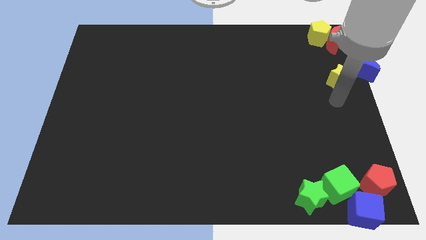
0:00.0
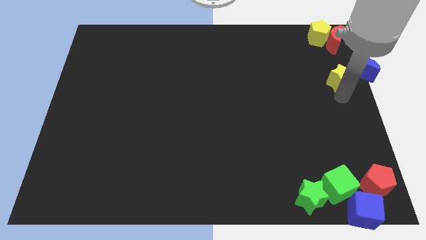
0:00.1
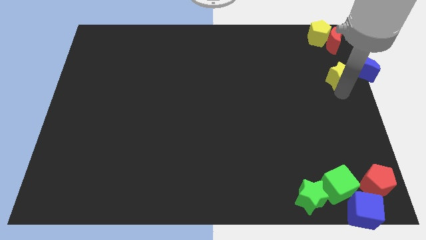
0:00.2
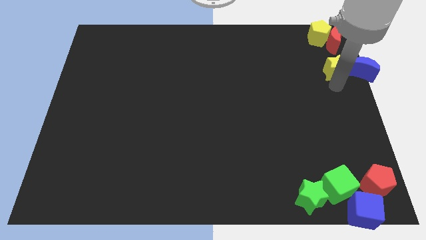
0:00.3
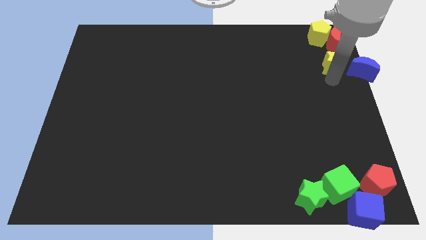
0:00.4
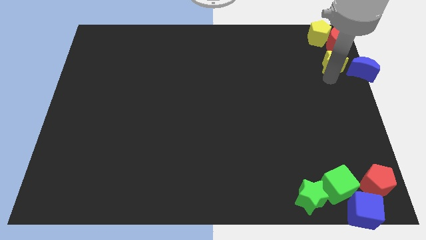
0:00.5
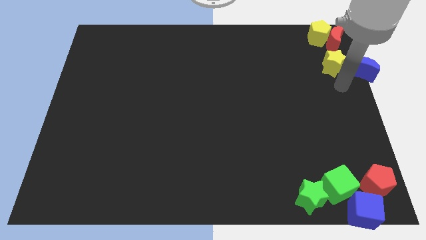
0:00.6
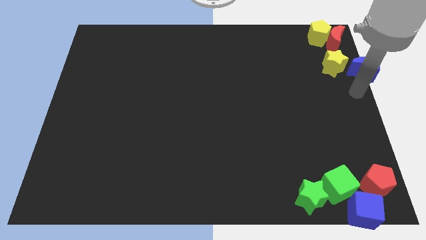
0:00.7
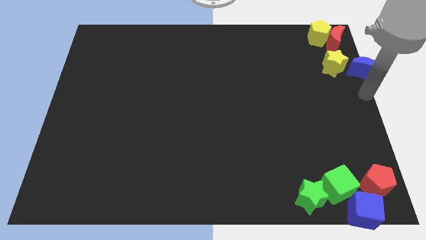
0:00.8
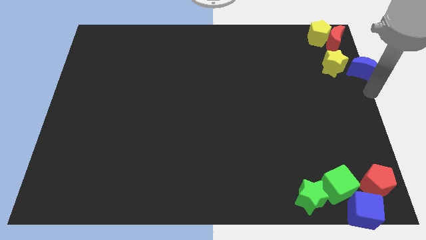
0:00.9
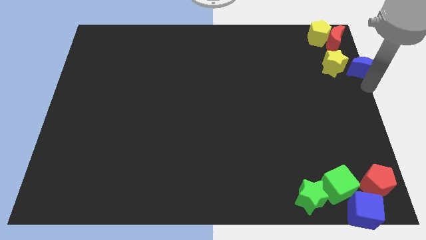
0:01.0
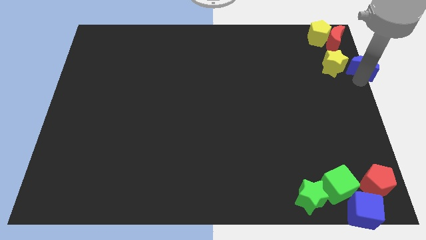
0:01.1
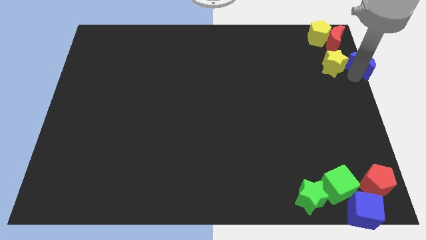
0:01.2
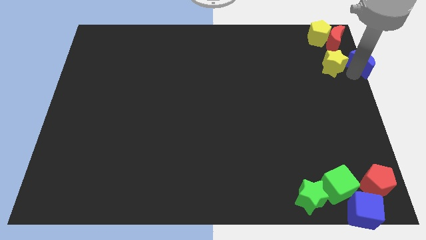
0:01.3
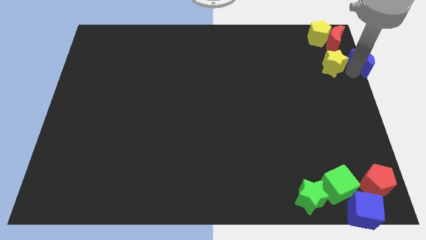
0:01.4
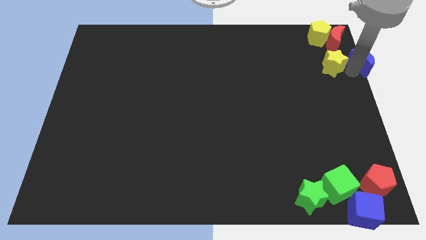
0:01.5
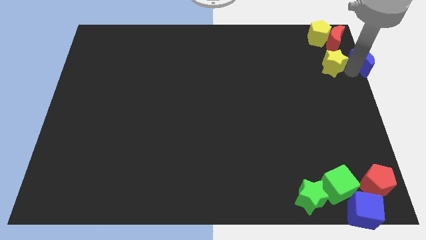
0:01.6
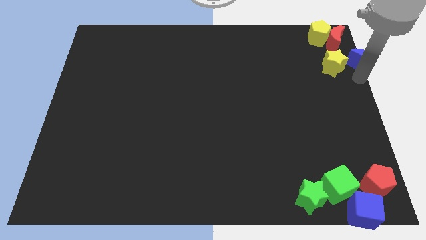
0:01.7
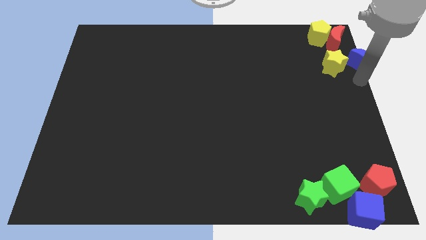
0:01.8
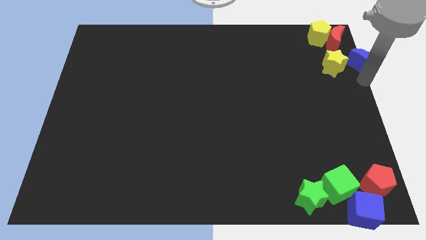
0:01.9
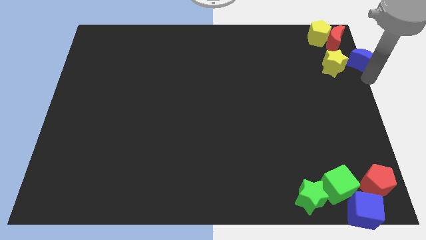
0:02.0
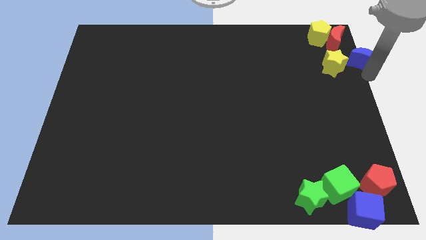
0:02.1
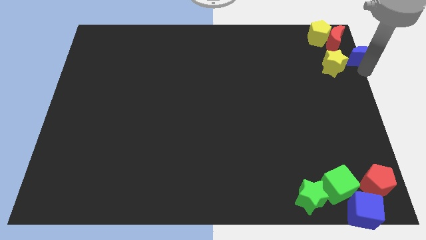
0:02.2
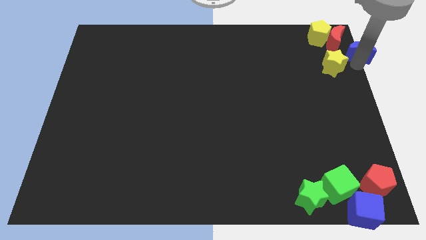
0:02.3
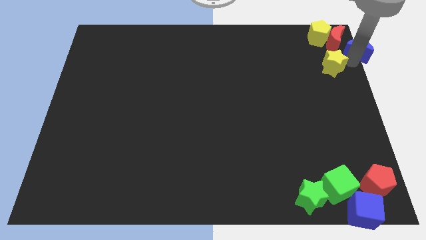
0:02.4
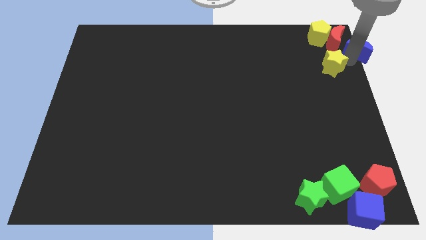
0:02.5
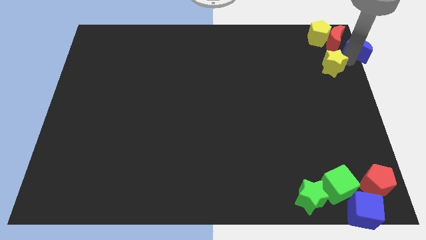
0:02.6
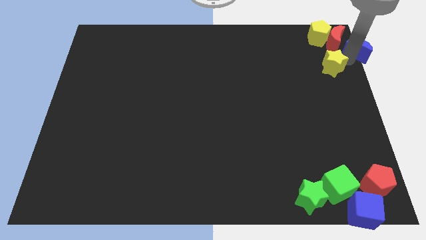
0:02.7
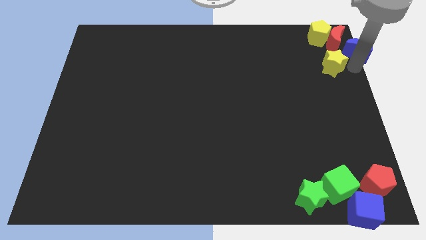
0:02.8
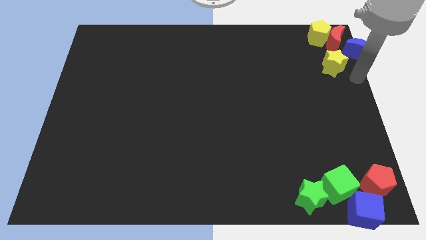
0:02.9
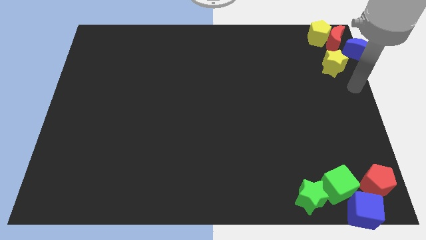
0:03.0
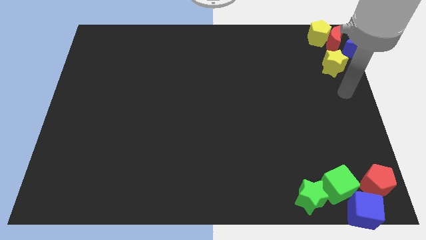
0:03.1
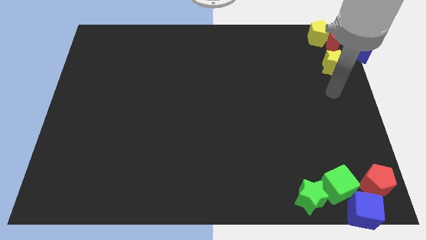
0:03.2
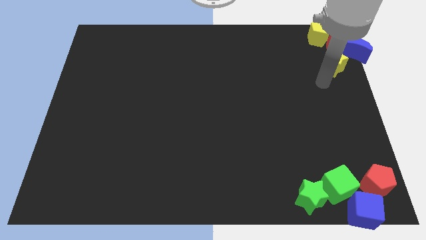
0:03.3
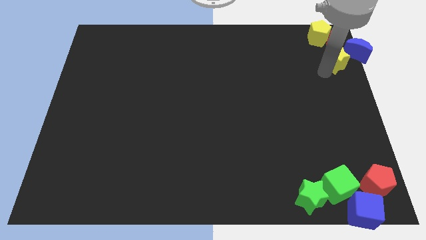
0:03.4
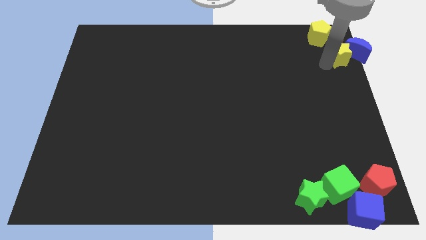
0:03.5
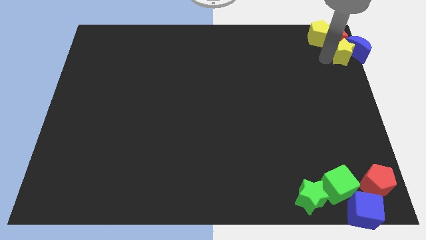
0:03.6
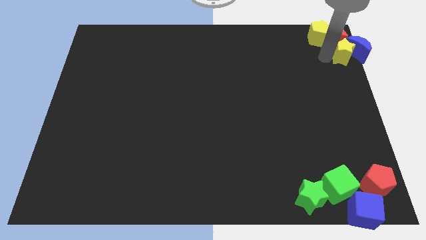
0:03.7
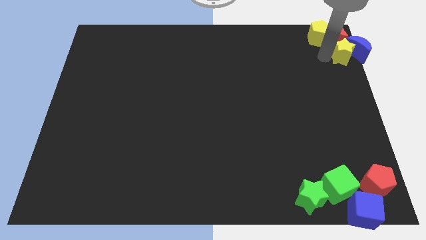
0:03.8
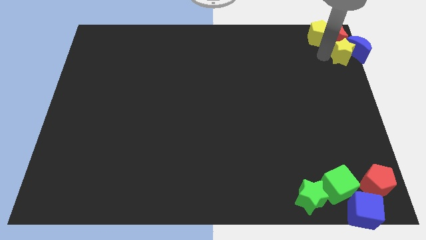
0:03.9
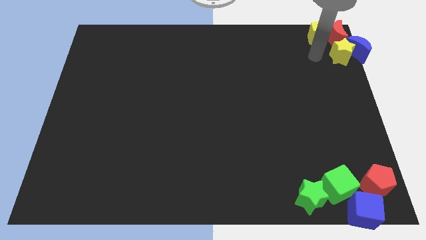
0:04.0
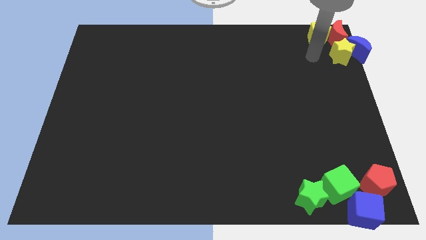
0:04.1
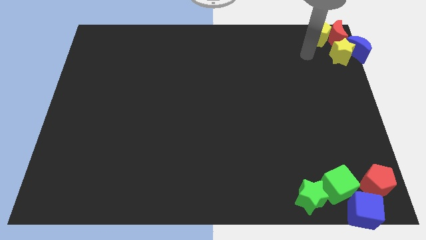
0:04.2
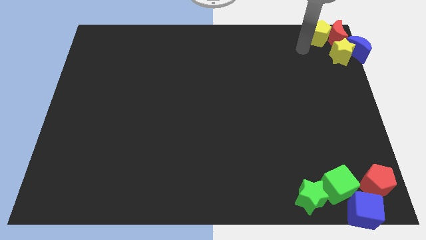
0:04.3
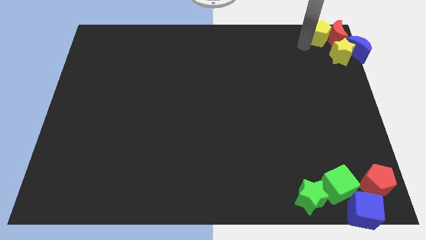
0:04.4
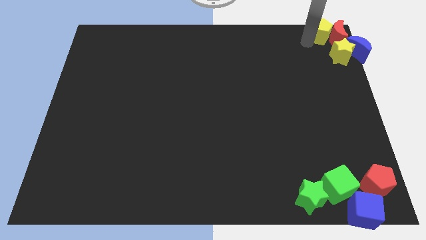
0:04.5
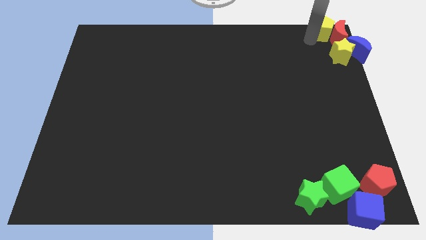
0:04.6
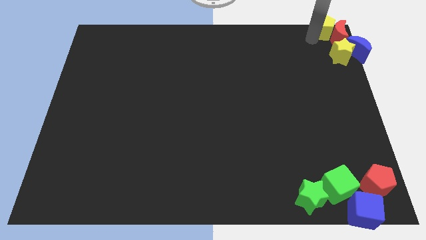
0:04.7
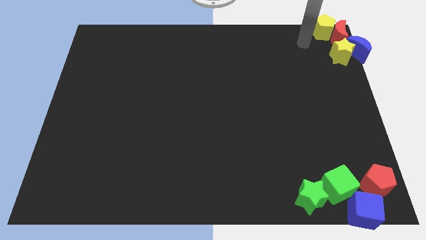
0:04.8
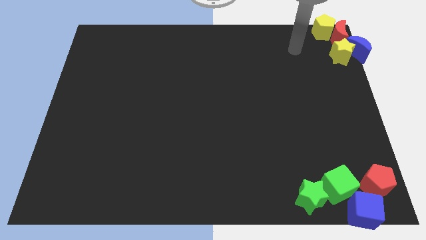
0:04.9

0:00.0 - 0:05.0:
push the group of blocks at the top right side of the board

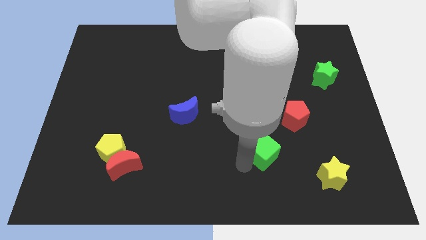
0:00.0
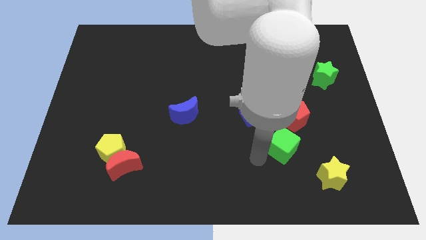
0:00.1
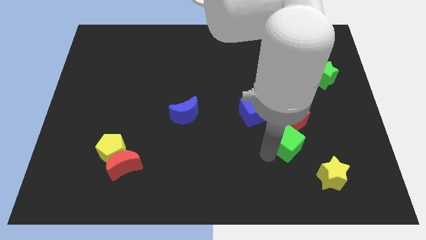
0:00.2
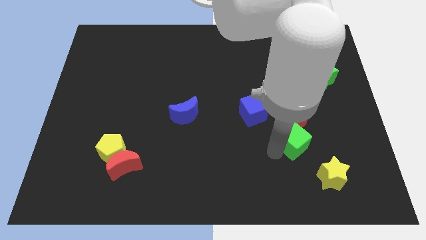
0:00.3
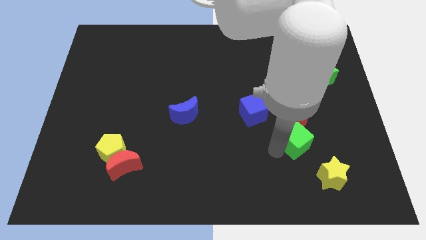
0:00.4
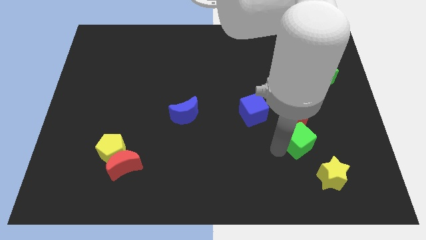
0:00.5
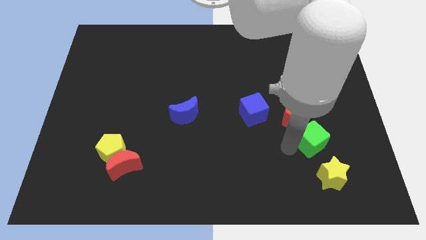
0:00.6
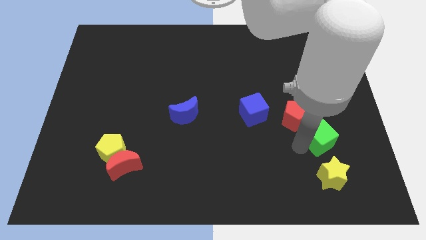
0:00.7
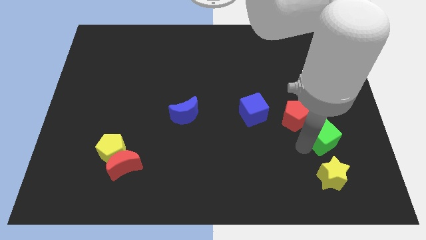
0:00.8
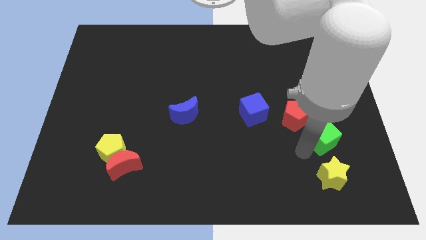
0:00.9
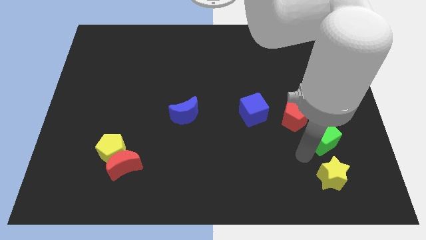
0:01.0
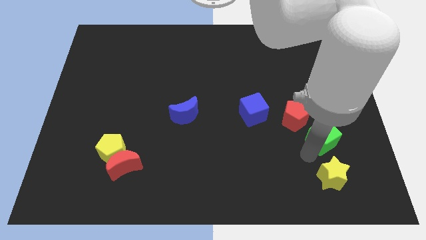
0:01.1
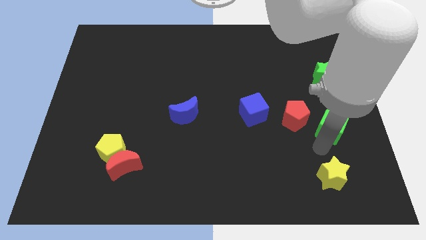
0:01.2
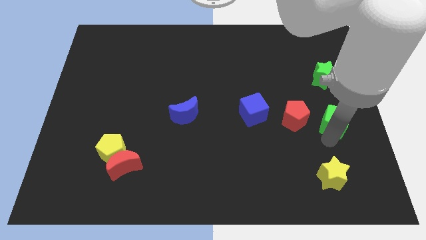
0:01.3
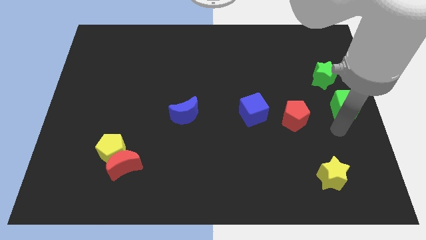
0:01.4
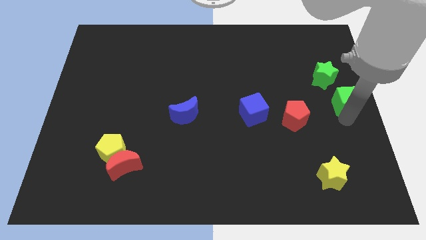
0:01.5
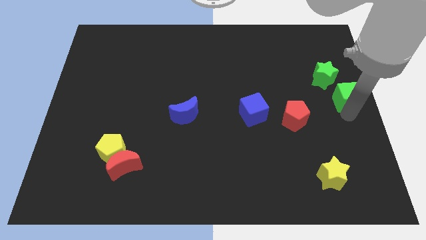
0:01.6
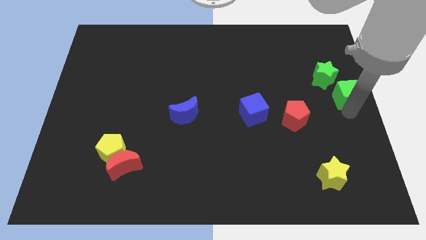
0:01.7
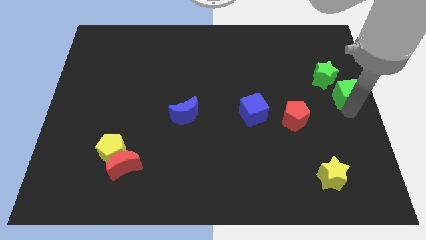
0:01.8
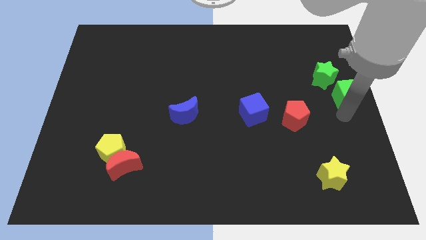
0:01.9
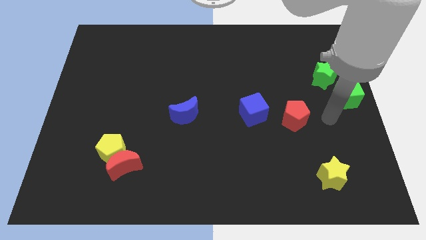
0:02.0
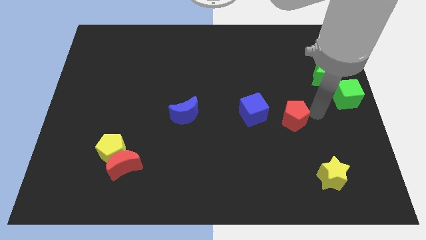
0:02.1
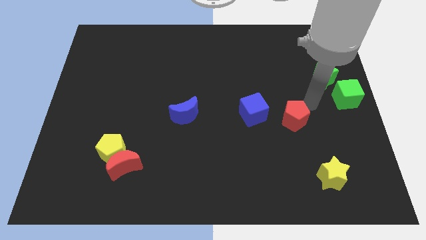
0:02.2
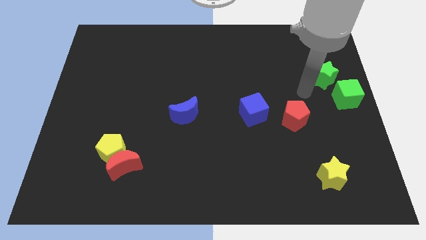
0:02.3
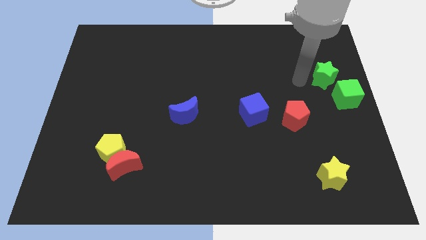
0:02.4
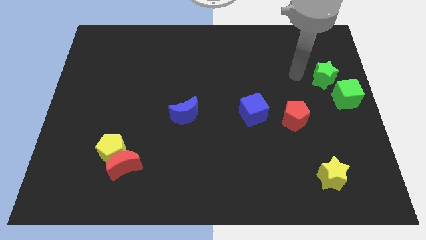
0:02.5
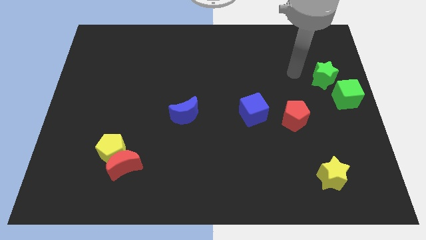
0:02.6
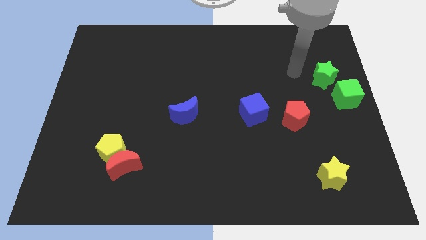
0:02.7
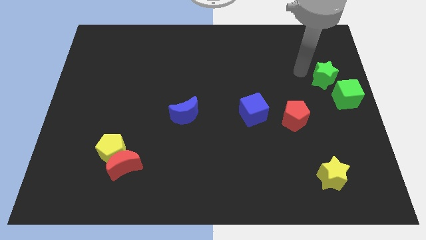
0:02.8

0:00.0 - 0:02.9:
move the green cube right center to the board

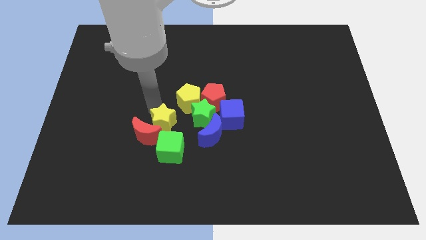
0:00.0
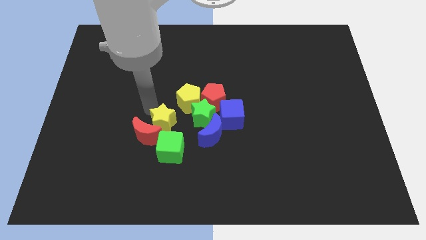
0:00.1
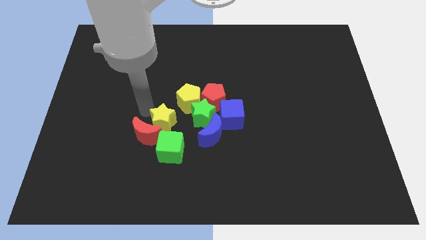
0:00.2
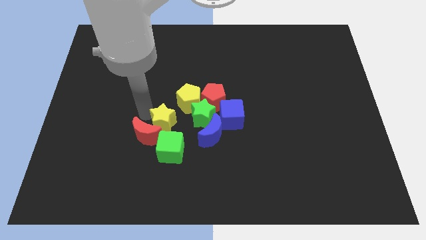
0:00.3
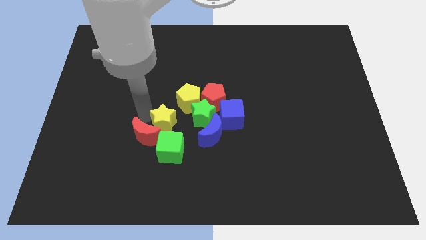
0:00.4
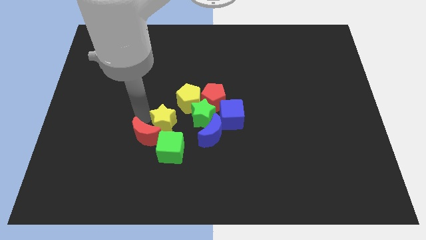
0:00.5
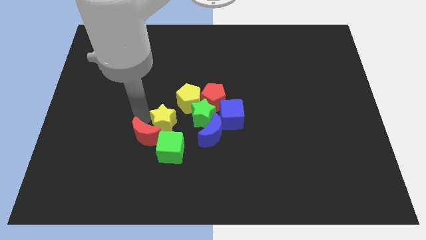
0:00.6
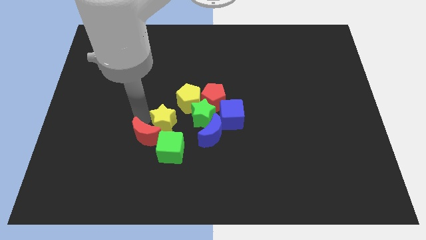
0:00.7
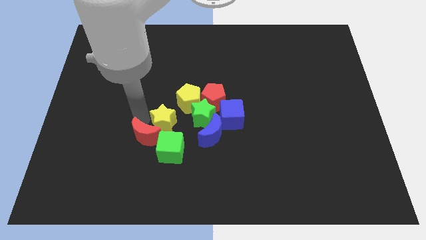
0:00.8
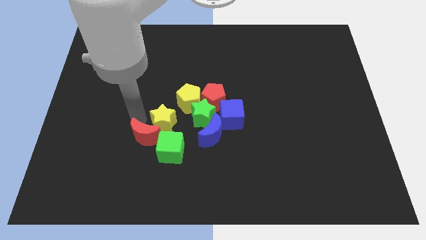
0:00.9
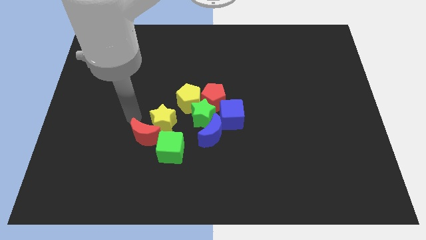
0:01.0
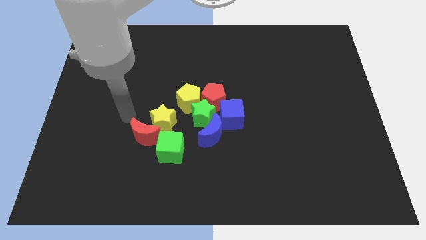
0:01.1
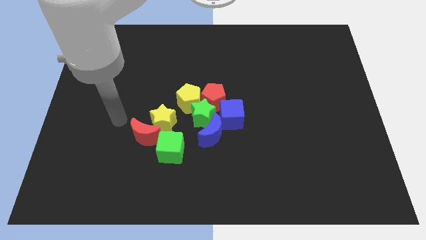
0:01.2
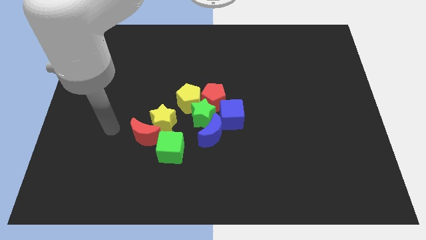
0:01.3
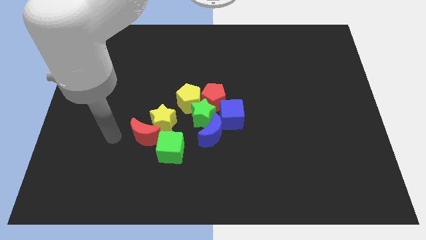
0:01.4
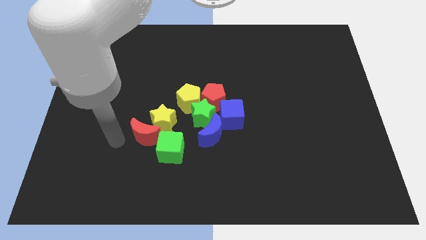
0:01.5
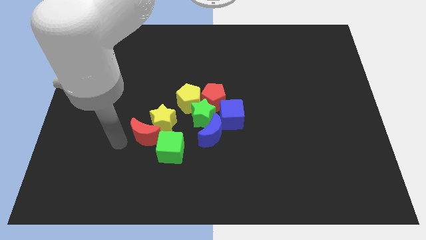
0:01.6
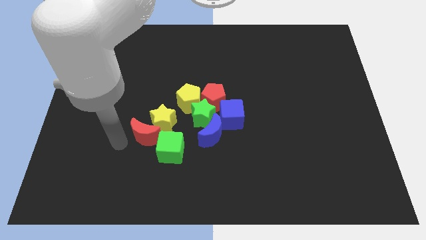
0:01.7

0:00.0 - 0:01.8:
move your arm away from the yellow star
